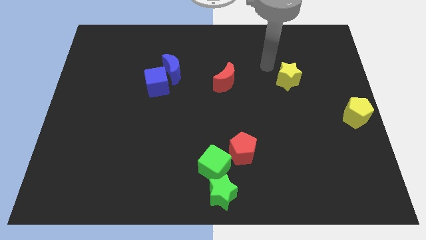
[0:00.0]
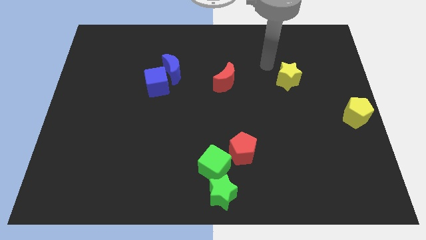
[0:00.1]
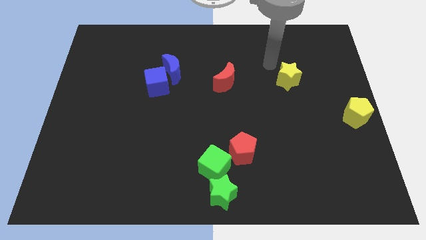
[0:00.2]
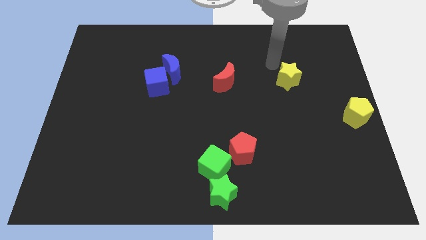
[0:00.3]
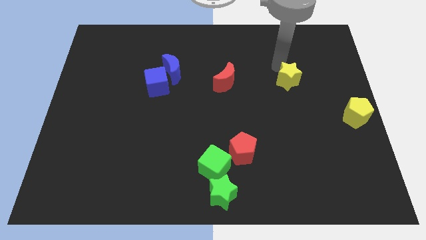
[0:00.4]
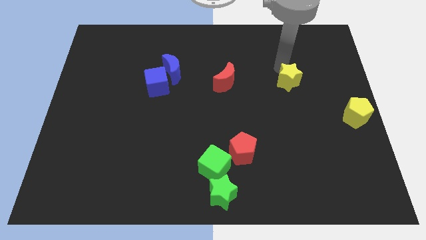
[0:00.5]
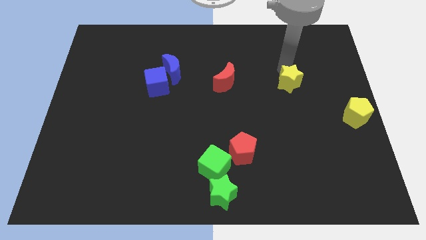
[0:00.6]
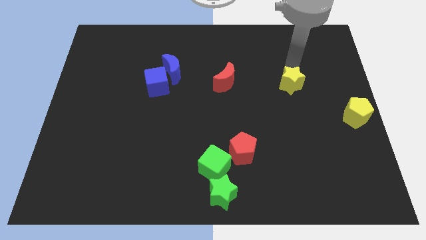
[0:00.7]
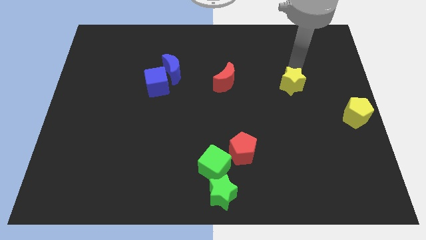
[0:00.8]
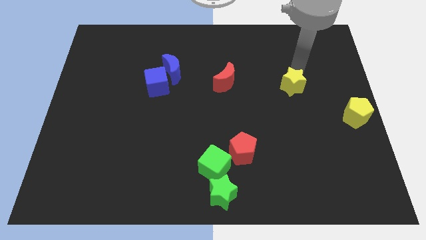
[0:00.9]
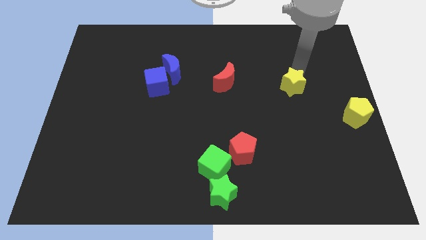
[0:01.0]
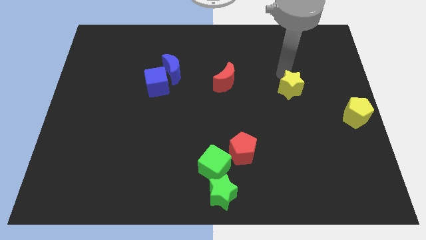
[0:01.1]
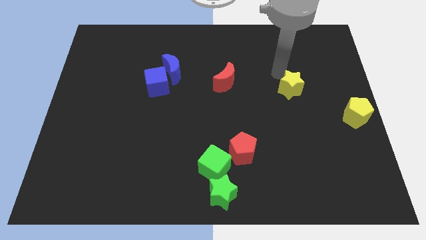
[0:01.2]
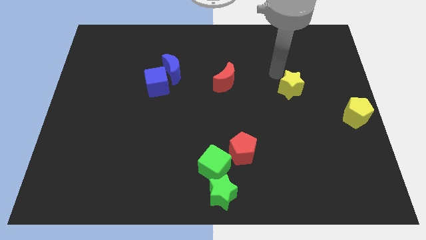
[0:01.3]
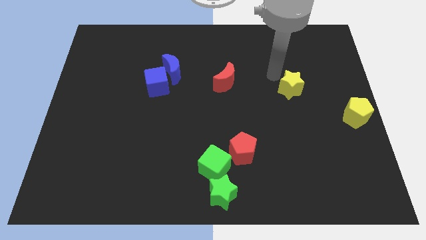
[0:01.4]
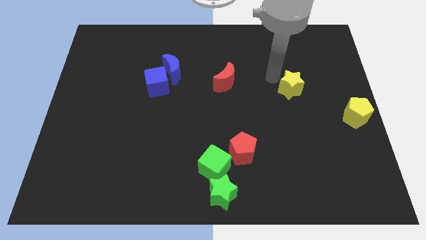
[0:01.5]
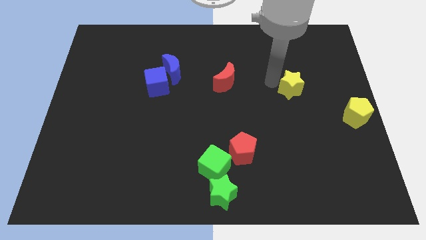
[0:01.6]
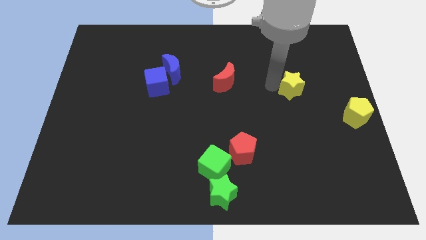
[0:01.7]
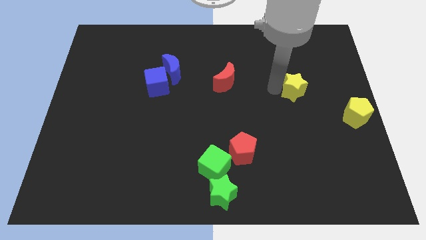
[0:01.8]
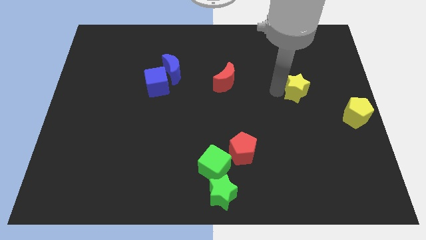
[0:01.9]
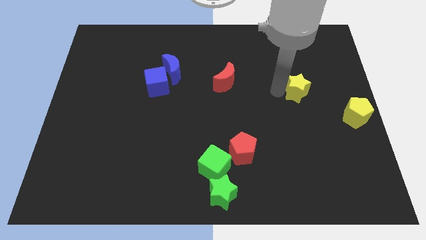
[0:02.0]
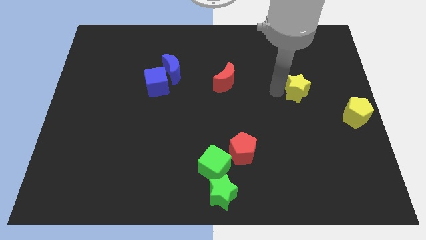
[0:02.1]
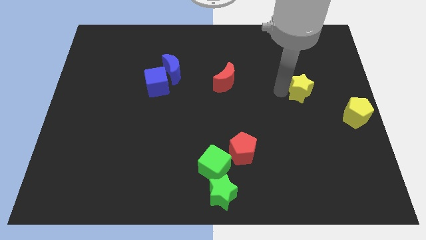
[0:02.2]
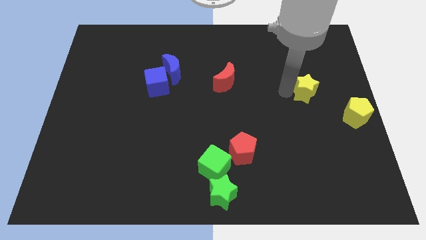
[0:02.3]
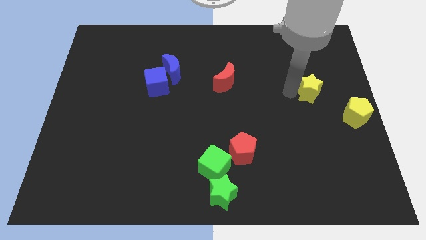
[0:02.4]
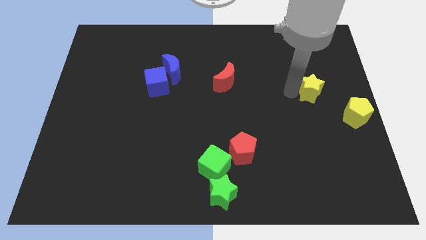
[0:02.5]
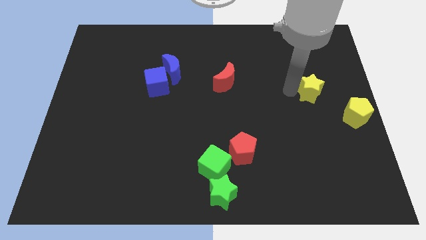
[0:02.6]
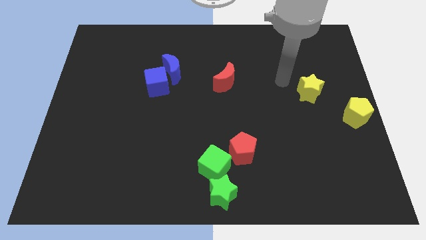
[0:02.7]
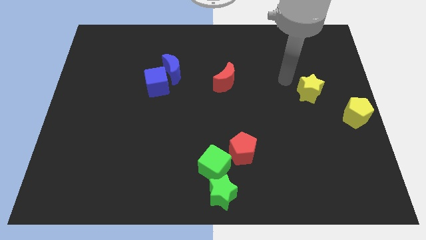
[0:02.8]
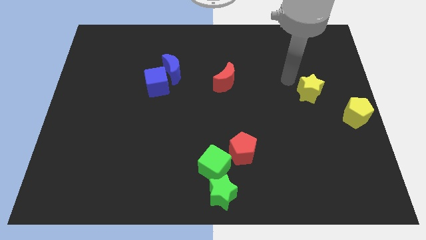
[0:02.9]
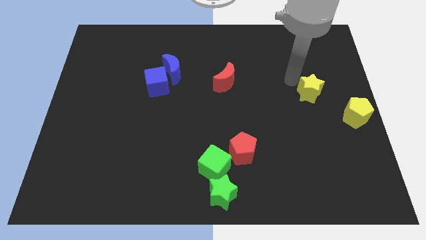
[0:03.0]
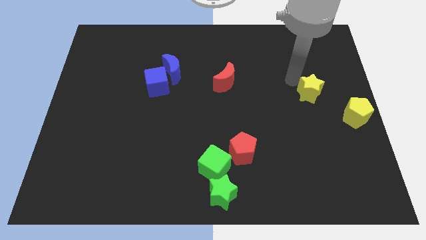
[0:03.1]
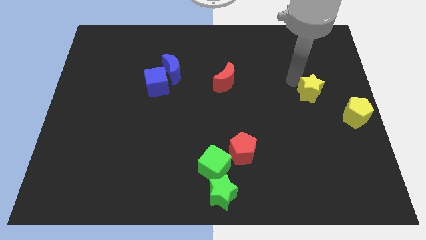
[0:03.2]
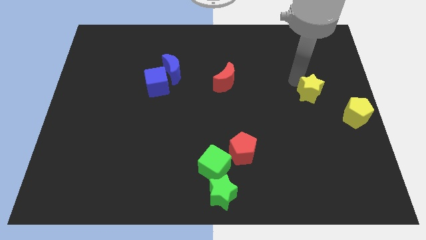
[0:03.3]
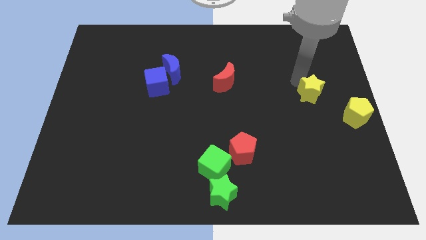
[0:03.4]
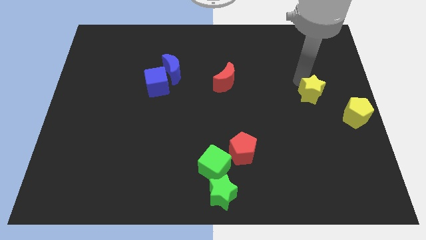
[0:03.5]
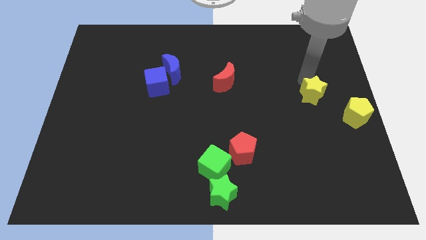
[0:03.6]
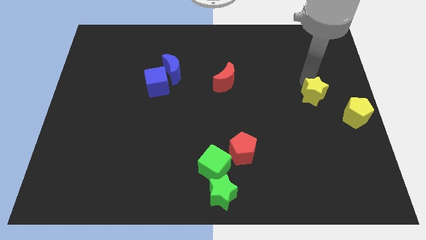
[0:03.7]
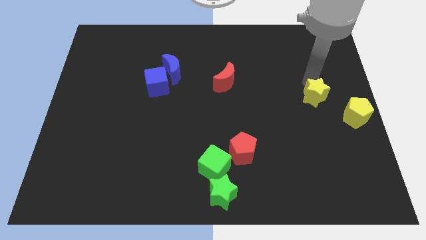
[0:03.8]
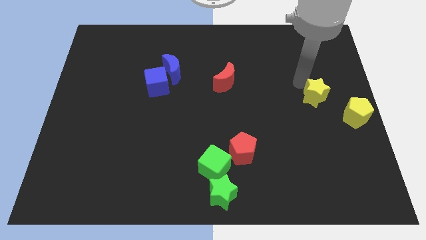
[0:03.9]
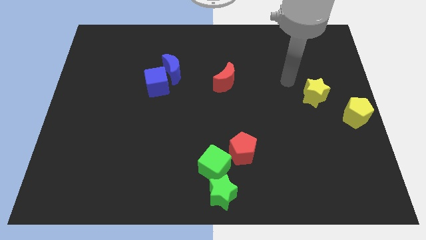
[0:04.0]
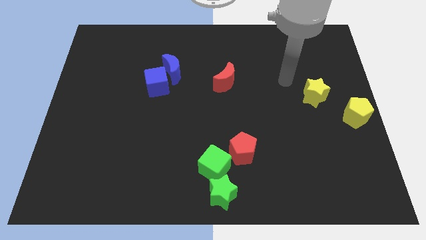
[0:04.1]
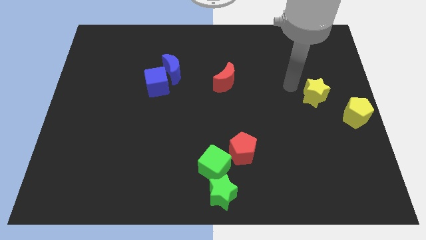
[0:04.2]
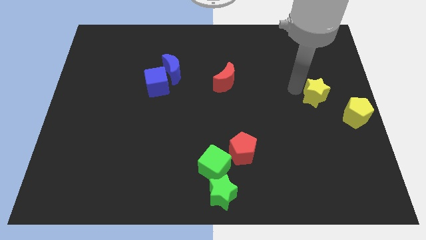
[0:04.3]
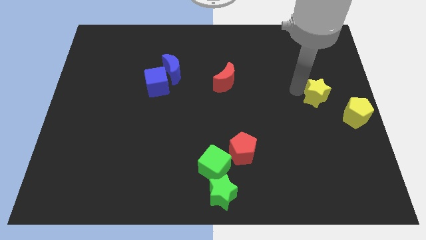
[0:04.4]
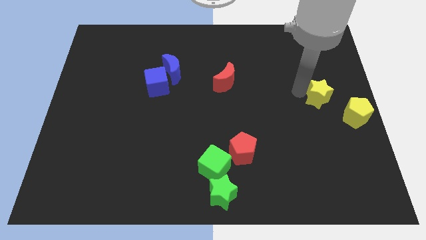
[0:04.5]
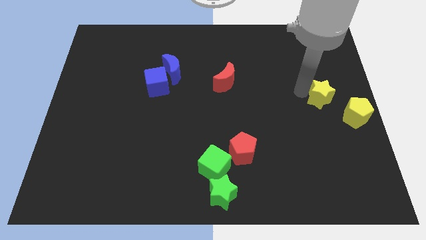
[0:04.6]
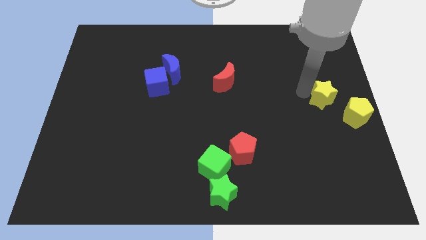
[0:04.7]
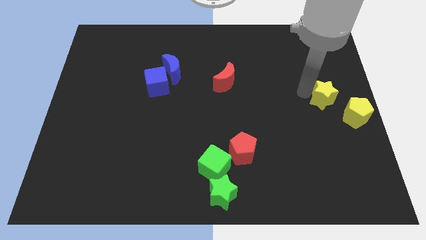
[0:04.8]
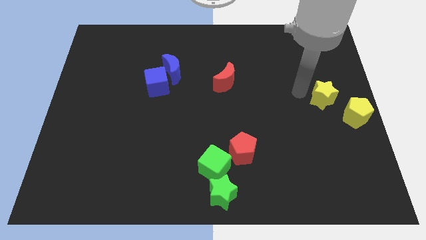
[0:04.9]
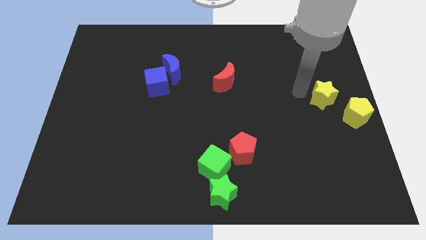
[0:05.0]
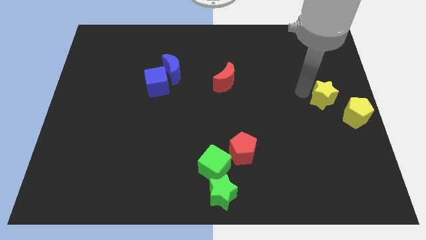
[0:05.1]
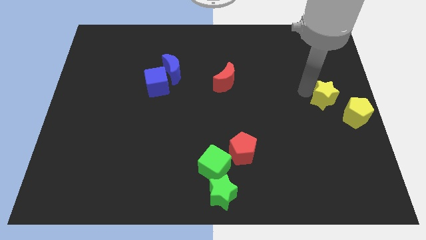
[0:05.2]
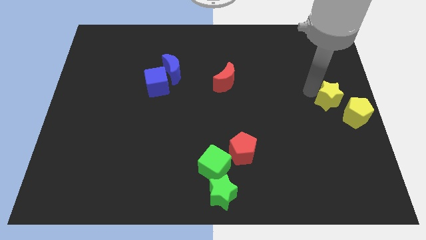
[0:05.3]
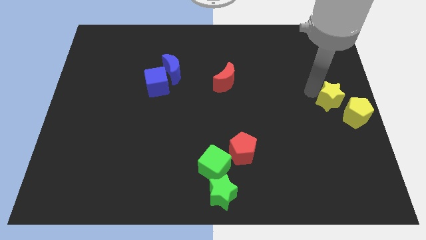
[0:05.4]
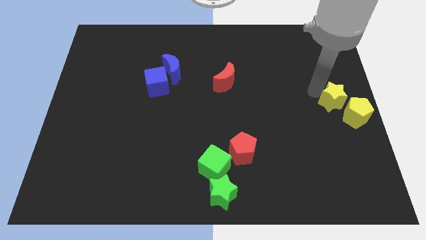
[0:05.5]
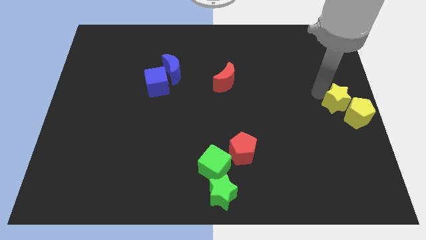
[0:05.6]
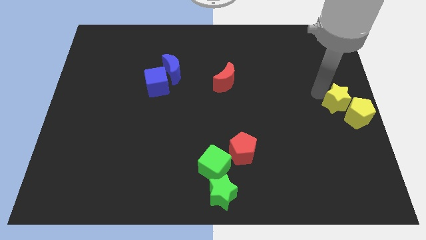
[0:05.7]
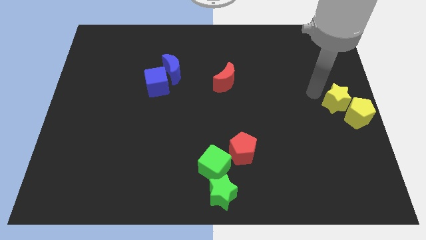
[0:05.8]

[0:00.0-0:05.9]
push the yellow star into the yellow pentagon

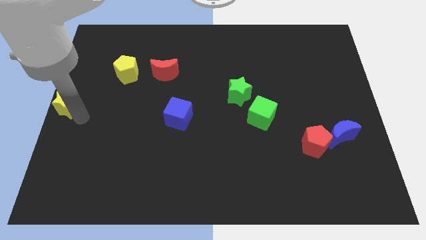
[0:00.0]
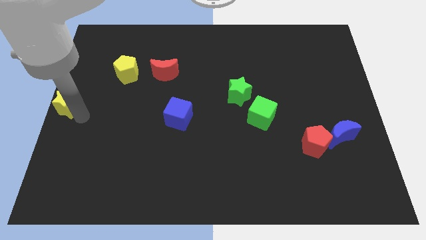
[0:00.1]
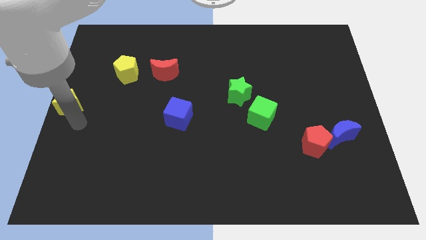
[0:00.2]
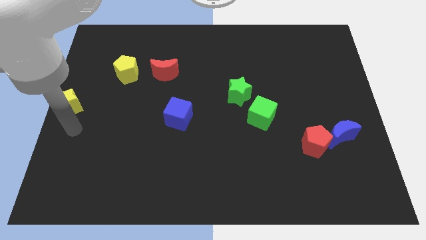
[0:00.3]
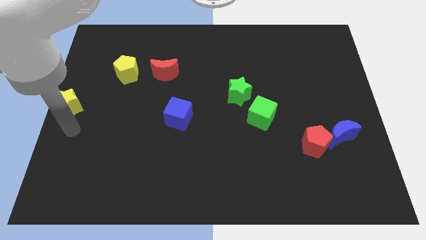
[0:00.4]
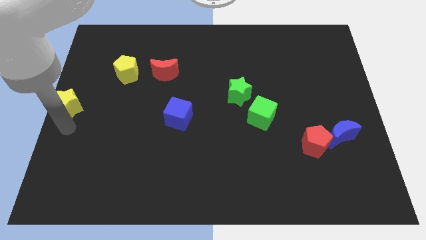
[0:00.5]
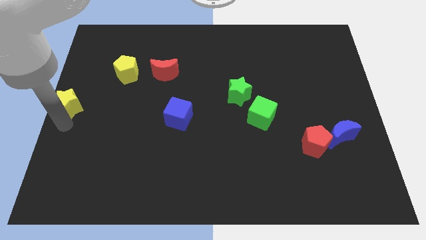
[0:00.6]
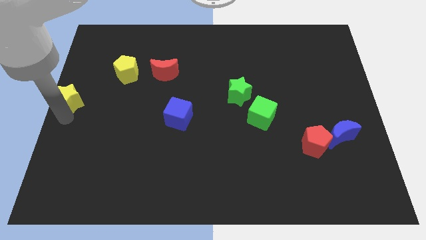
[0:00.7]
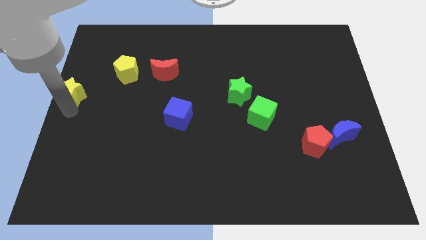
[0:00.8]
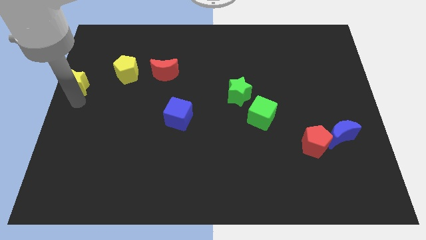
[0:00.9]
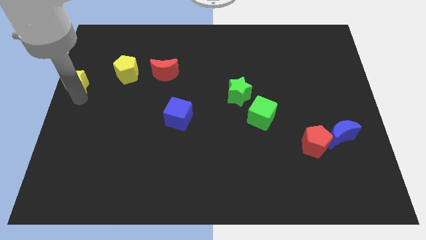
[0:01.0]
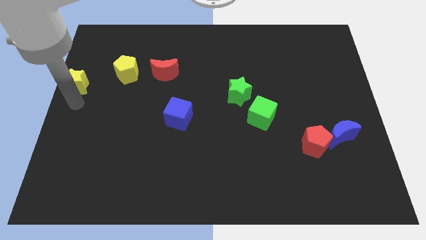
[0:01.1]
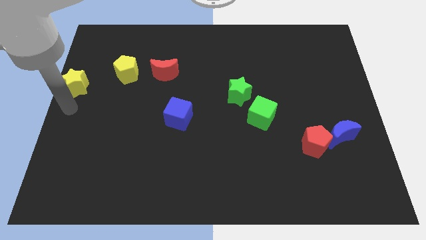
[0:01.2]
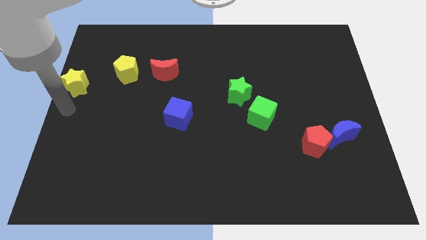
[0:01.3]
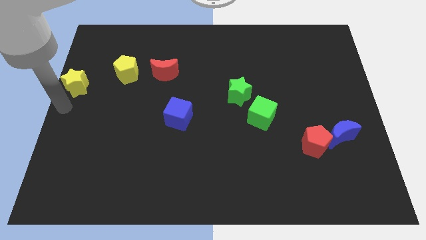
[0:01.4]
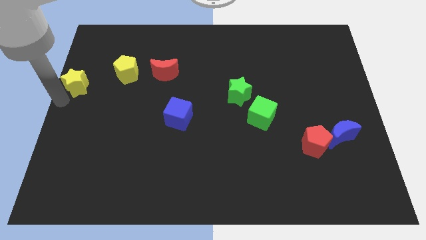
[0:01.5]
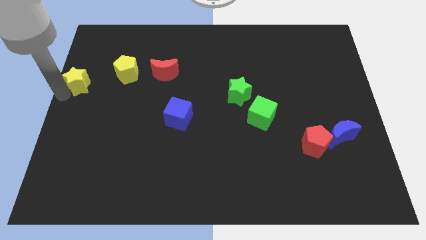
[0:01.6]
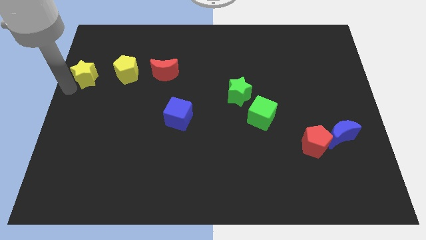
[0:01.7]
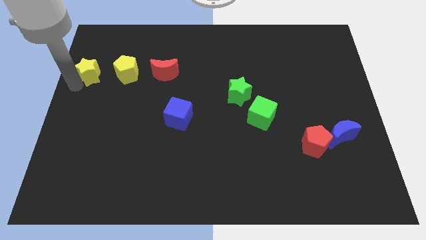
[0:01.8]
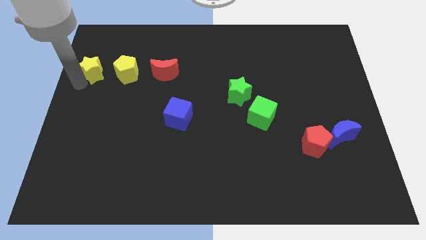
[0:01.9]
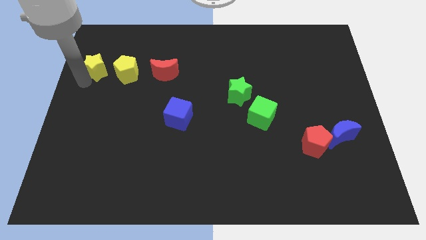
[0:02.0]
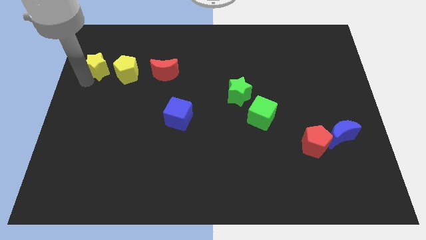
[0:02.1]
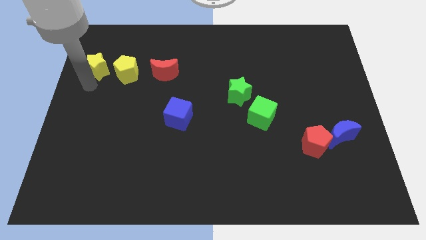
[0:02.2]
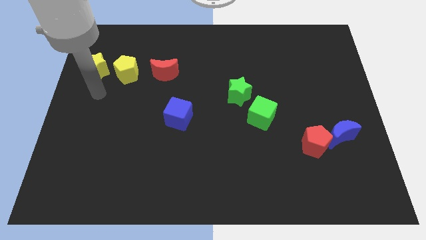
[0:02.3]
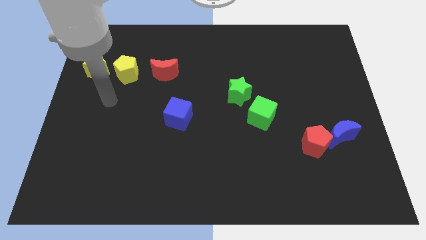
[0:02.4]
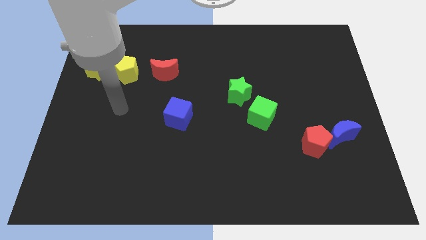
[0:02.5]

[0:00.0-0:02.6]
place the yellow star left to the yellow pentagon

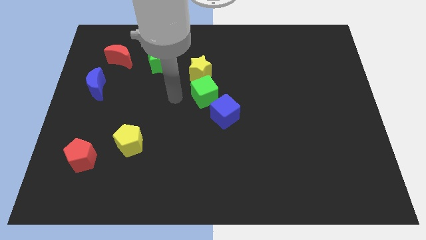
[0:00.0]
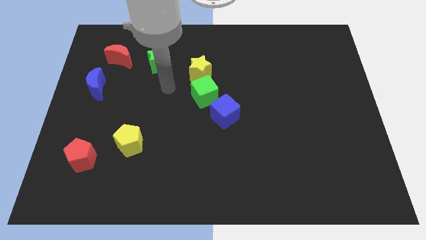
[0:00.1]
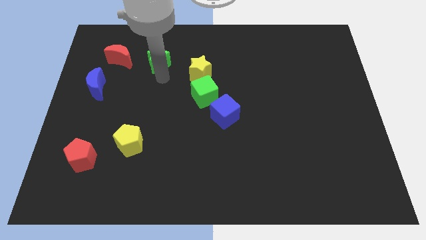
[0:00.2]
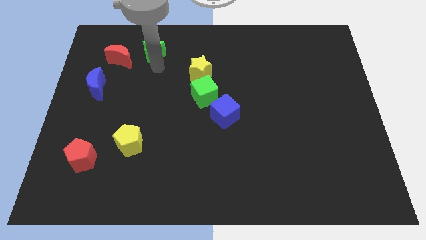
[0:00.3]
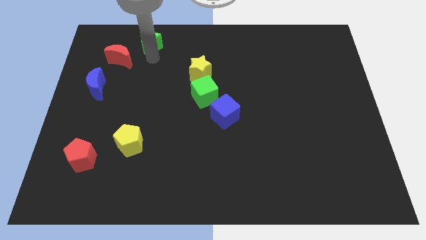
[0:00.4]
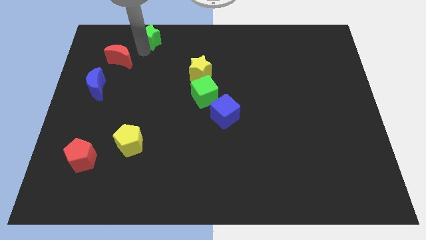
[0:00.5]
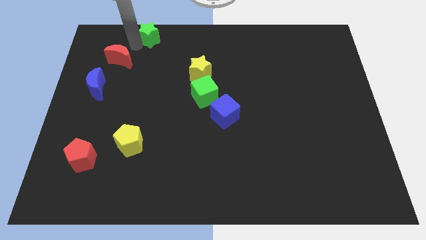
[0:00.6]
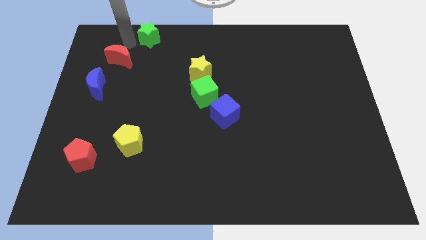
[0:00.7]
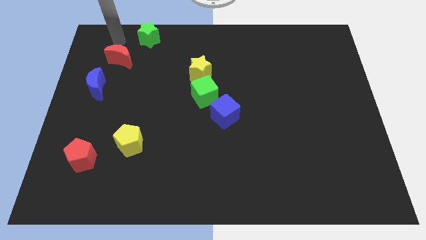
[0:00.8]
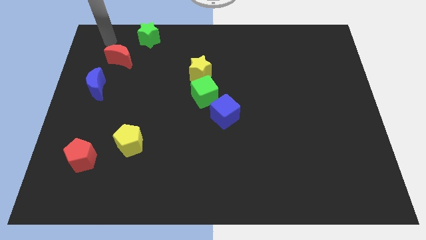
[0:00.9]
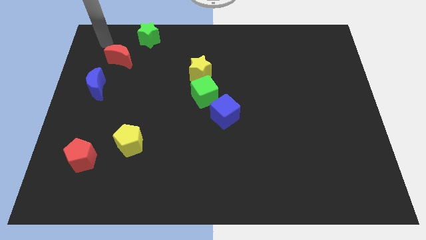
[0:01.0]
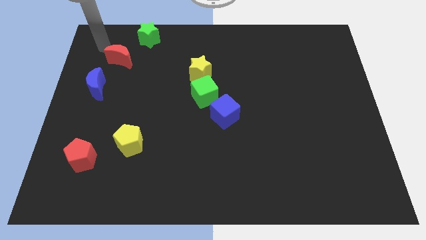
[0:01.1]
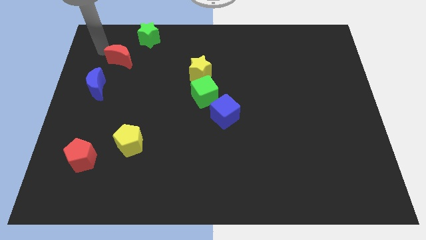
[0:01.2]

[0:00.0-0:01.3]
put the green star diagonally top right to the red crescent
